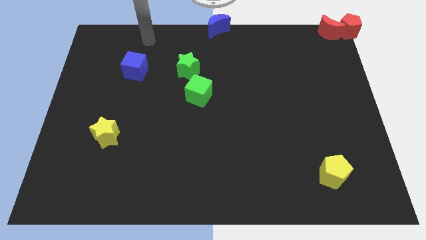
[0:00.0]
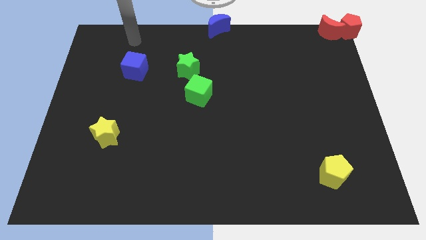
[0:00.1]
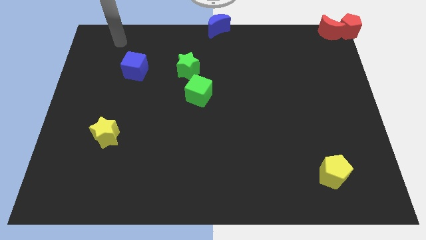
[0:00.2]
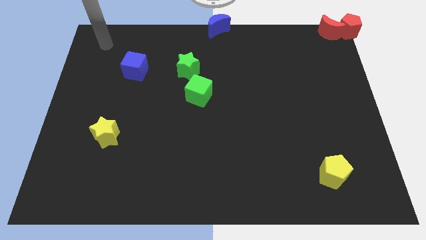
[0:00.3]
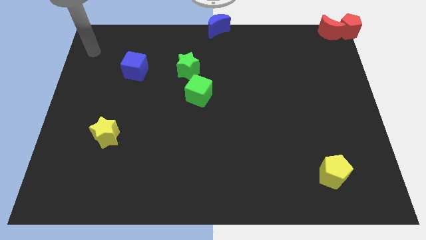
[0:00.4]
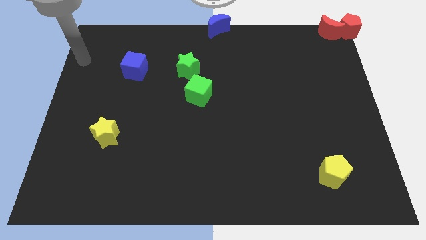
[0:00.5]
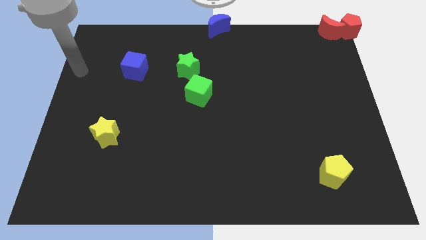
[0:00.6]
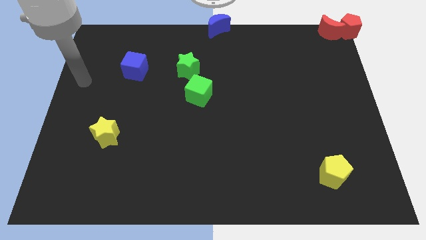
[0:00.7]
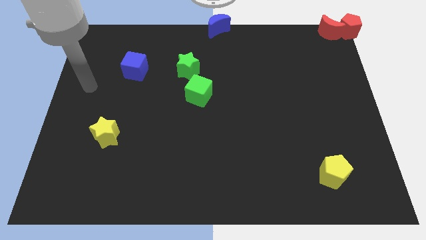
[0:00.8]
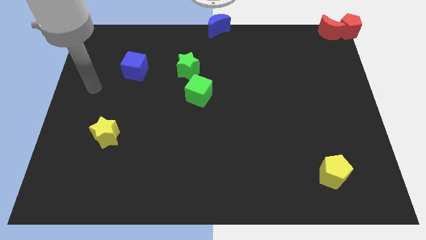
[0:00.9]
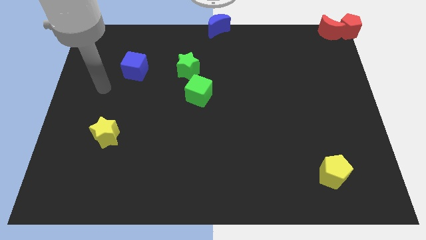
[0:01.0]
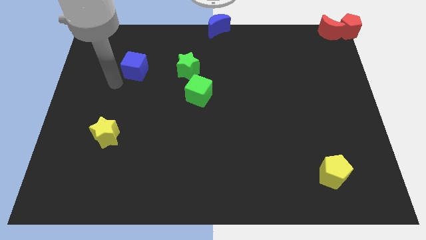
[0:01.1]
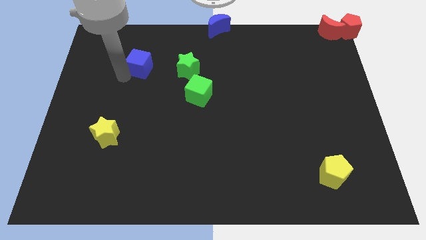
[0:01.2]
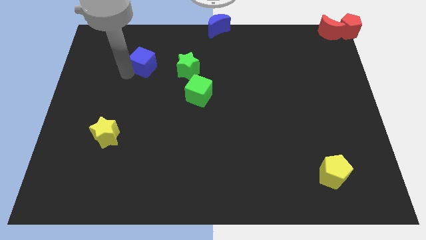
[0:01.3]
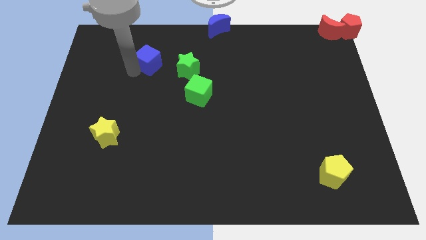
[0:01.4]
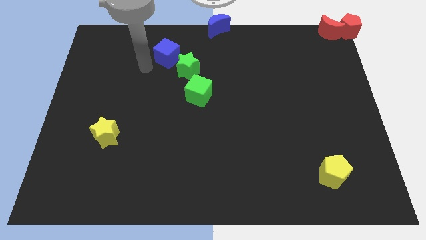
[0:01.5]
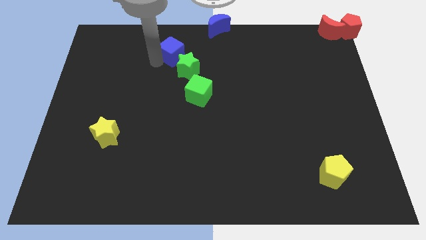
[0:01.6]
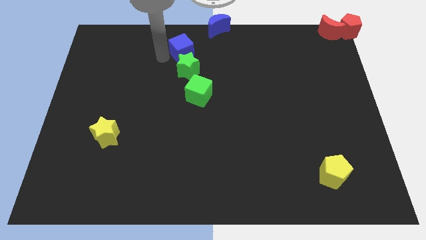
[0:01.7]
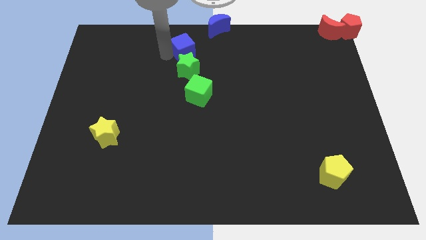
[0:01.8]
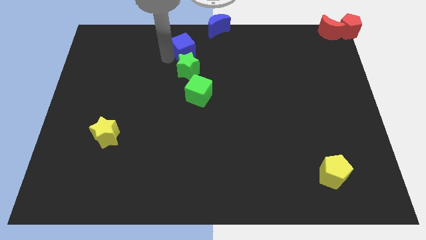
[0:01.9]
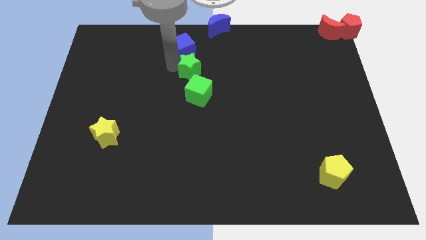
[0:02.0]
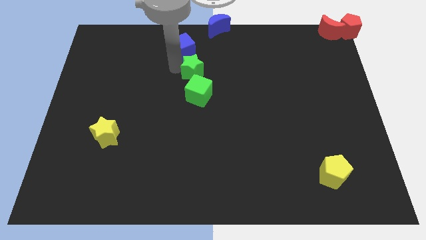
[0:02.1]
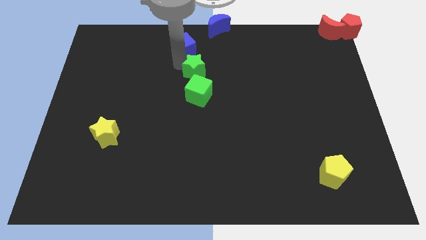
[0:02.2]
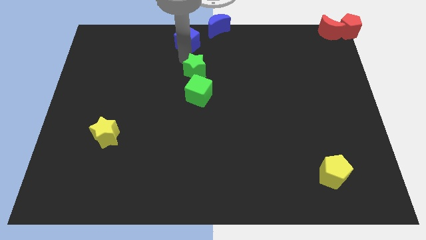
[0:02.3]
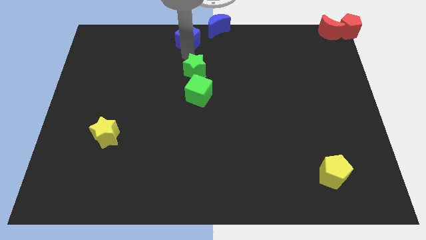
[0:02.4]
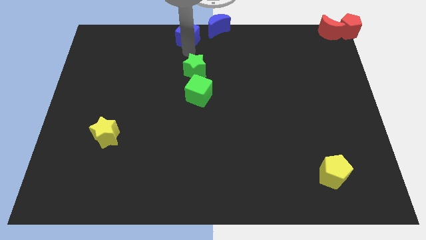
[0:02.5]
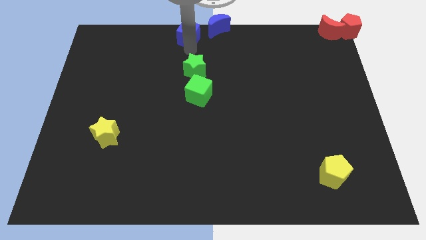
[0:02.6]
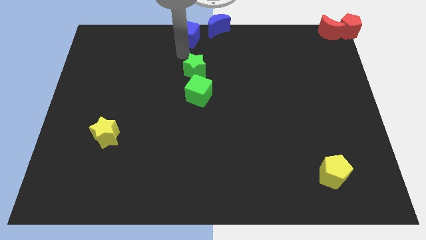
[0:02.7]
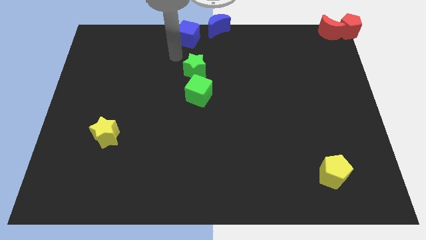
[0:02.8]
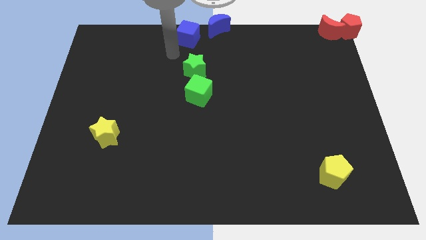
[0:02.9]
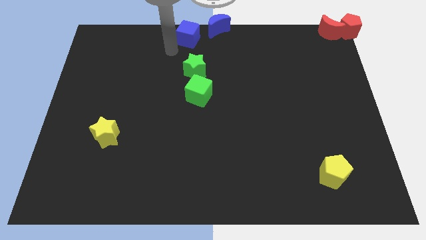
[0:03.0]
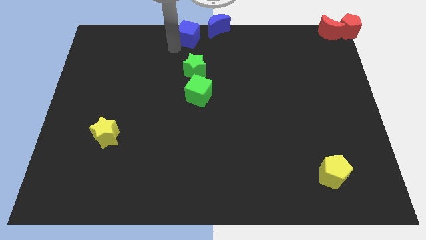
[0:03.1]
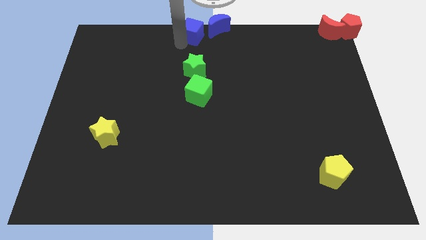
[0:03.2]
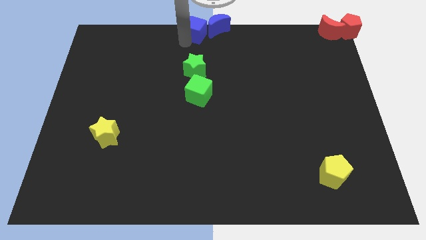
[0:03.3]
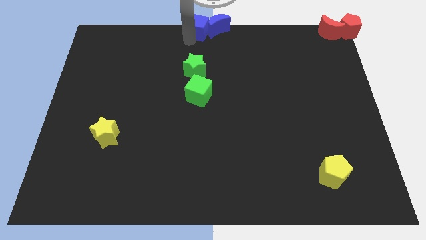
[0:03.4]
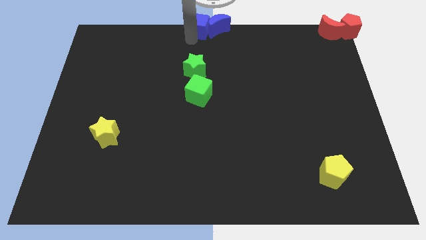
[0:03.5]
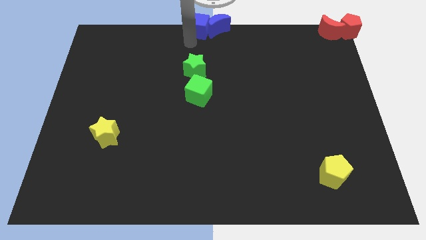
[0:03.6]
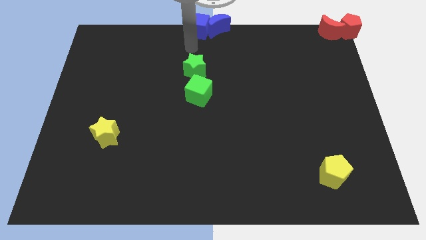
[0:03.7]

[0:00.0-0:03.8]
move the blue cube towards blue moon at the top

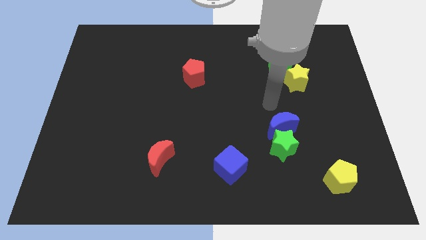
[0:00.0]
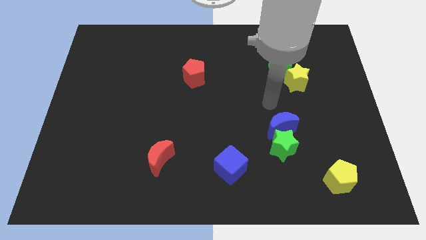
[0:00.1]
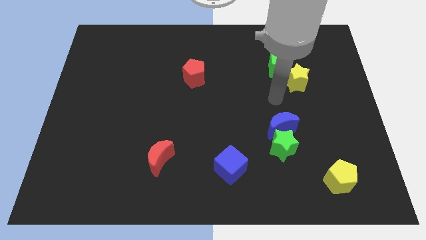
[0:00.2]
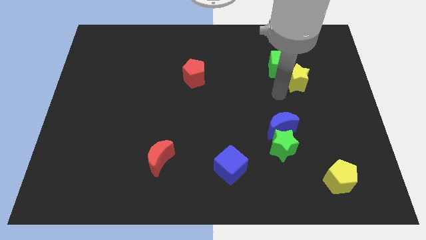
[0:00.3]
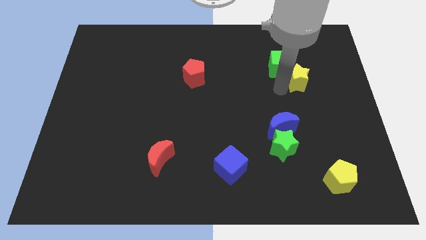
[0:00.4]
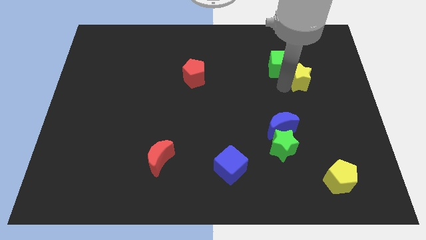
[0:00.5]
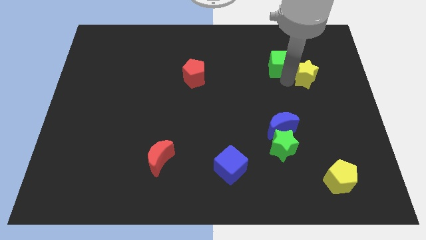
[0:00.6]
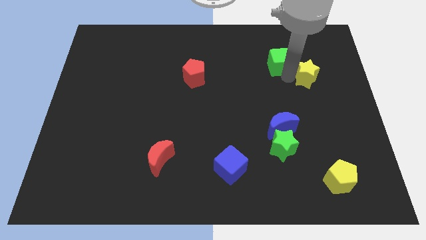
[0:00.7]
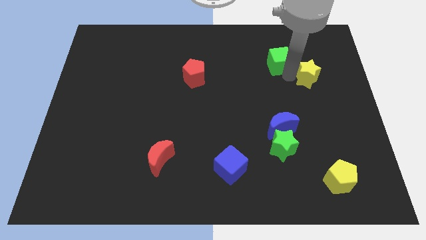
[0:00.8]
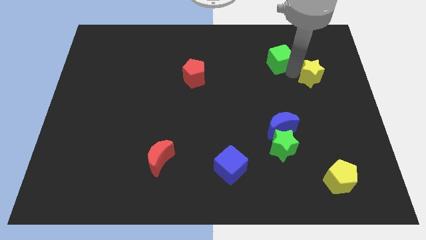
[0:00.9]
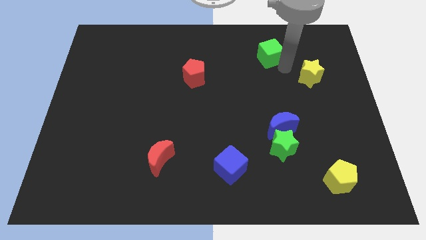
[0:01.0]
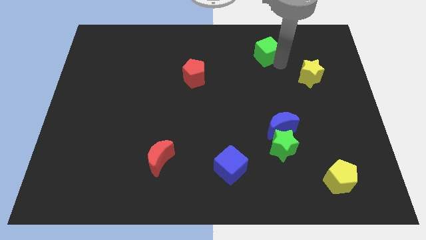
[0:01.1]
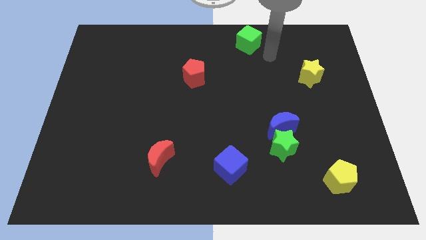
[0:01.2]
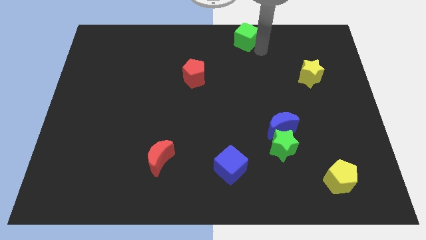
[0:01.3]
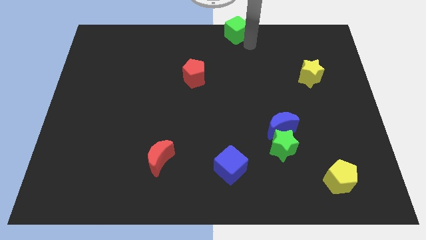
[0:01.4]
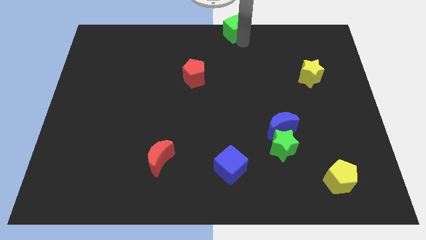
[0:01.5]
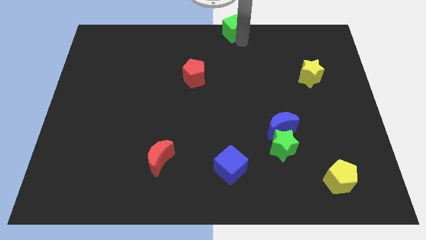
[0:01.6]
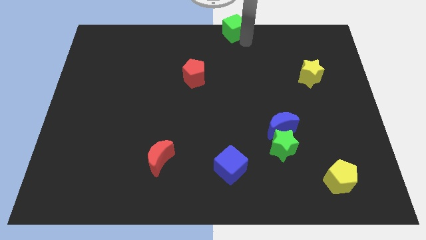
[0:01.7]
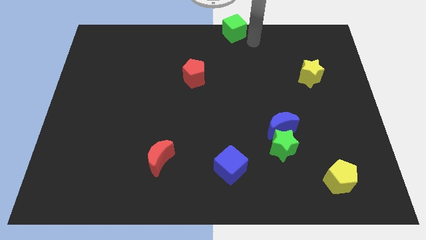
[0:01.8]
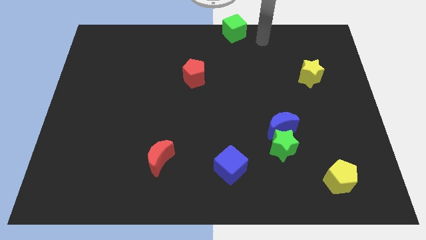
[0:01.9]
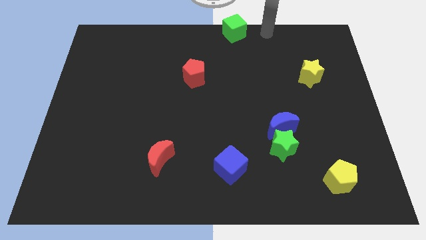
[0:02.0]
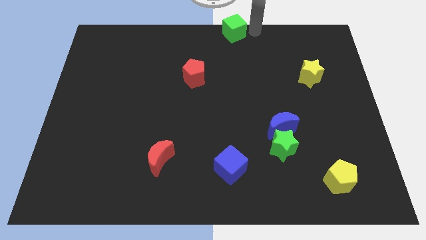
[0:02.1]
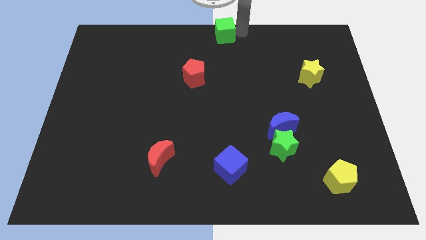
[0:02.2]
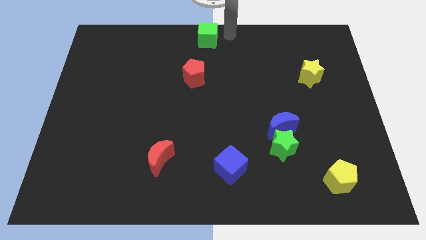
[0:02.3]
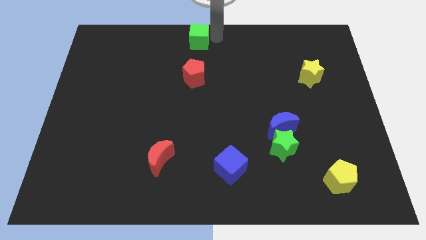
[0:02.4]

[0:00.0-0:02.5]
separate the green cube from the yellow star

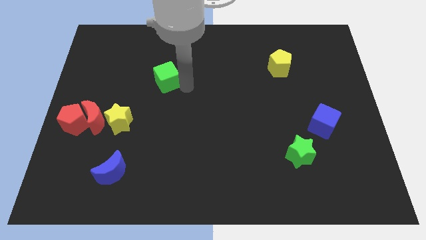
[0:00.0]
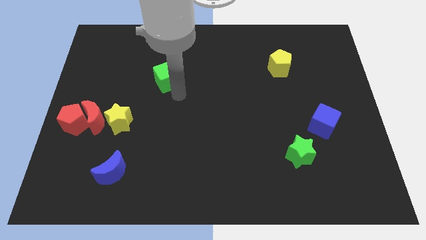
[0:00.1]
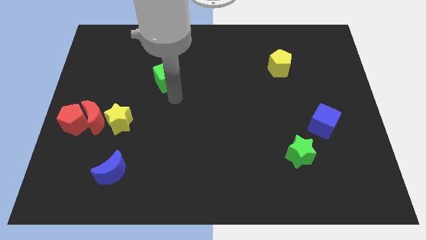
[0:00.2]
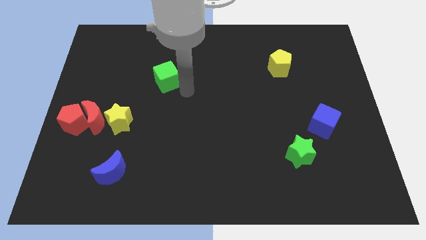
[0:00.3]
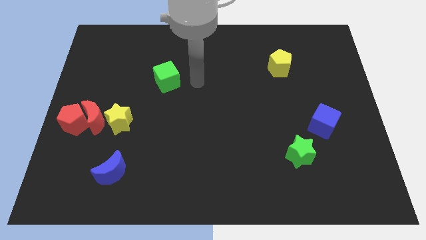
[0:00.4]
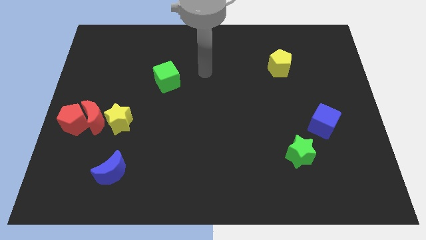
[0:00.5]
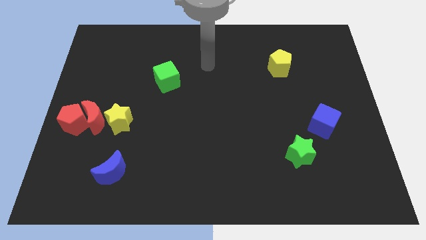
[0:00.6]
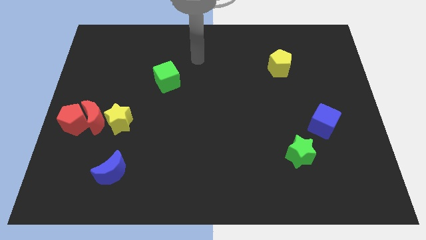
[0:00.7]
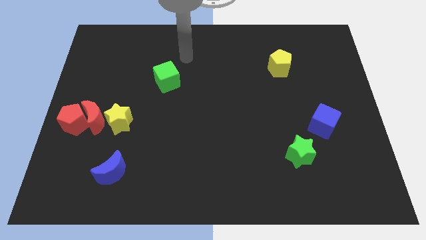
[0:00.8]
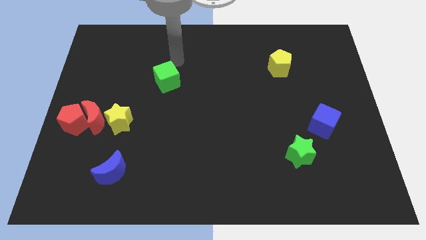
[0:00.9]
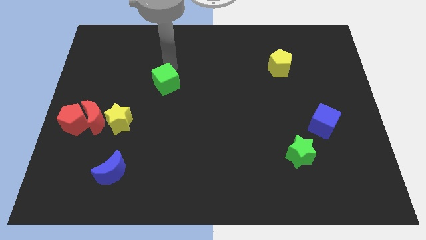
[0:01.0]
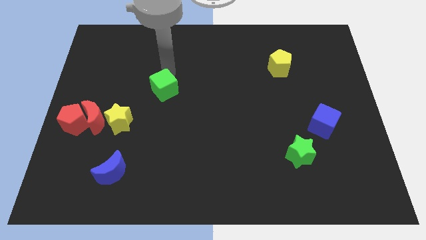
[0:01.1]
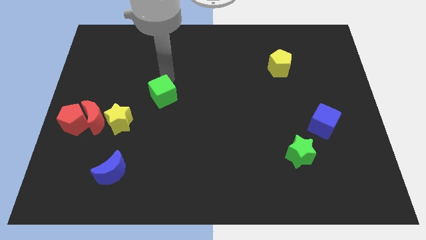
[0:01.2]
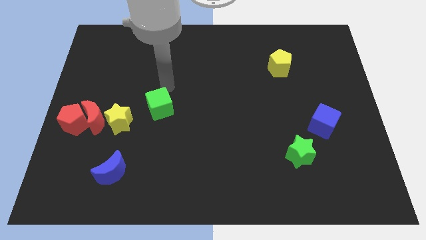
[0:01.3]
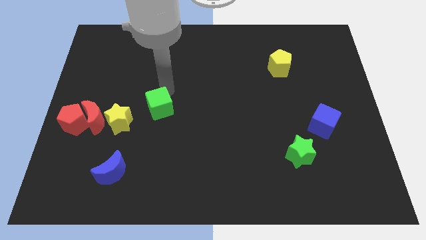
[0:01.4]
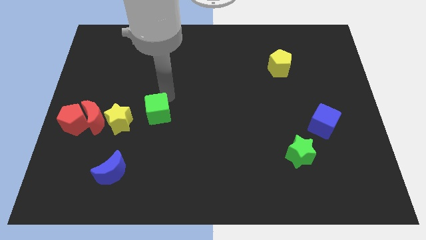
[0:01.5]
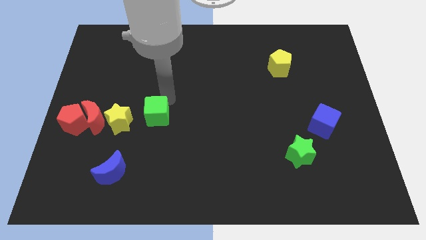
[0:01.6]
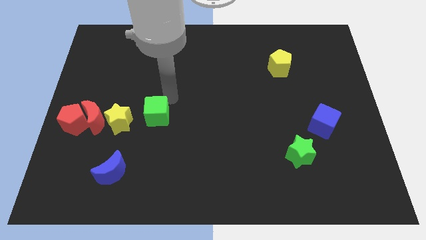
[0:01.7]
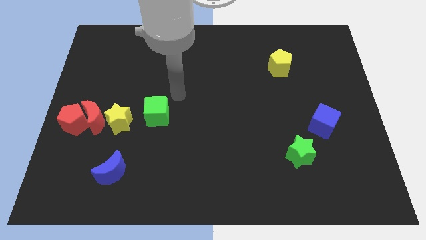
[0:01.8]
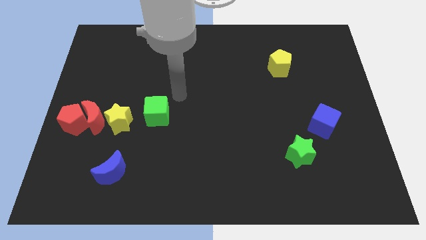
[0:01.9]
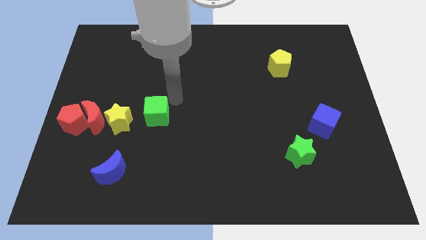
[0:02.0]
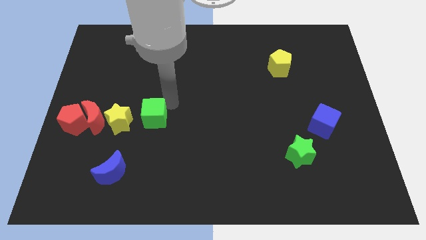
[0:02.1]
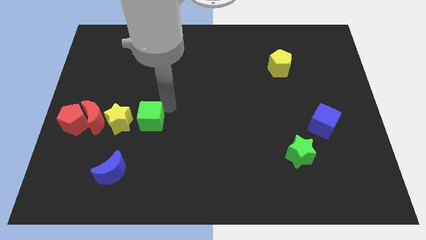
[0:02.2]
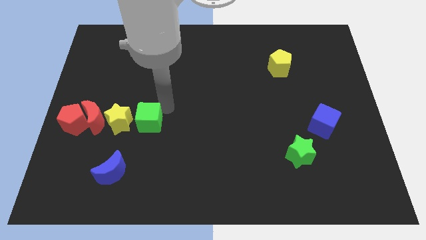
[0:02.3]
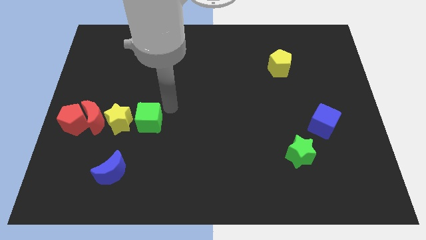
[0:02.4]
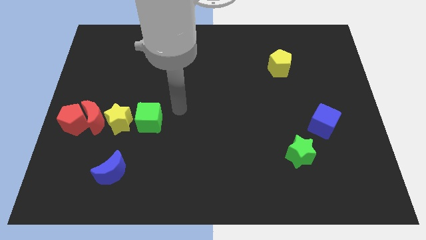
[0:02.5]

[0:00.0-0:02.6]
move the green cube right to the yellow star
